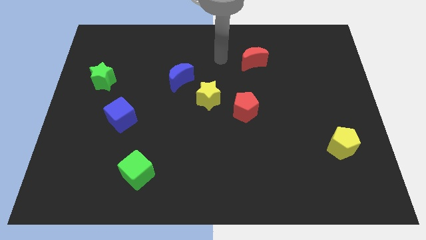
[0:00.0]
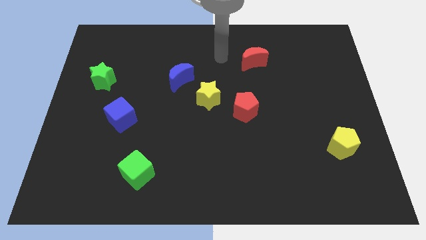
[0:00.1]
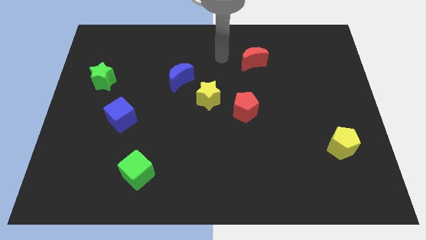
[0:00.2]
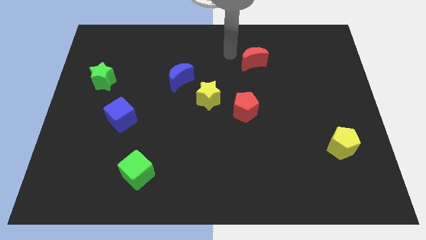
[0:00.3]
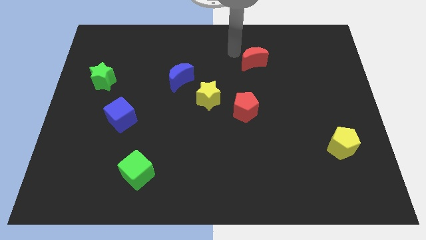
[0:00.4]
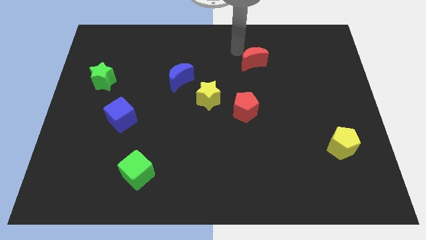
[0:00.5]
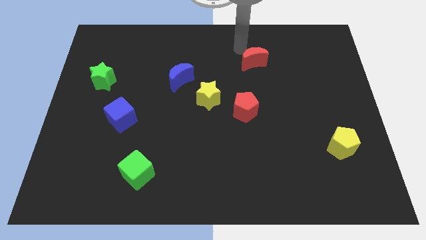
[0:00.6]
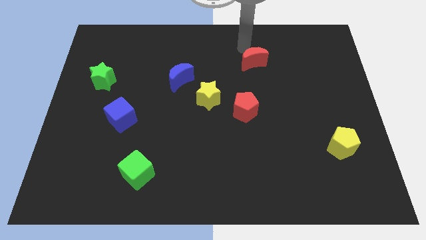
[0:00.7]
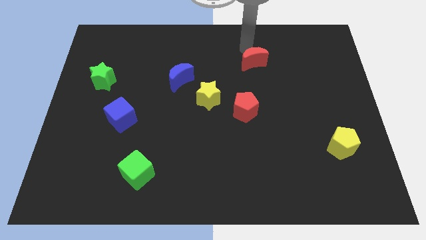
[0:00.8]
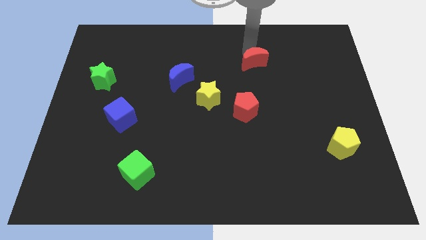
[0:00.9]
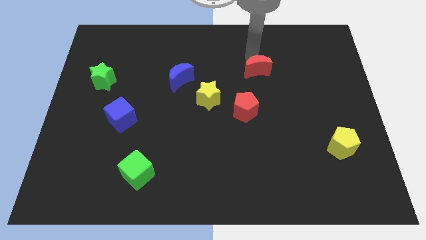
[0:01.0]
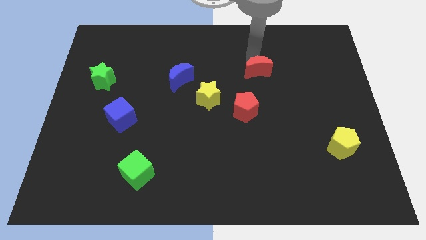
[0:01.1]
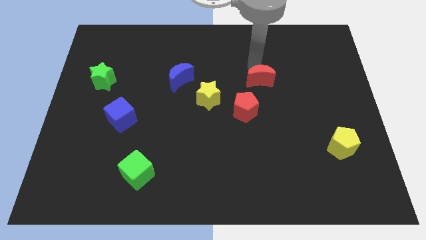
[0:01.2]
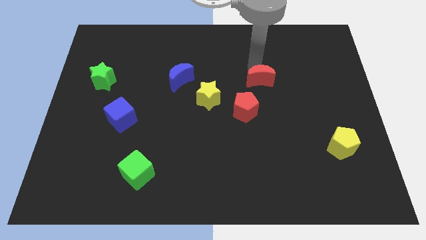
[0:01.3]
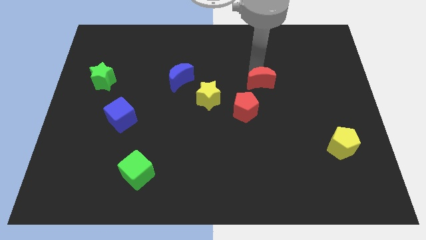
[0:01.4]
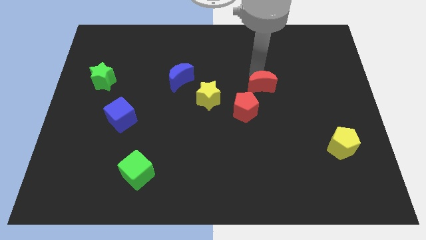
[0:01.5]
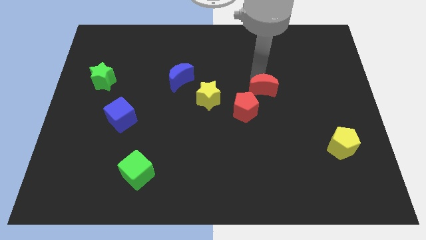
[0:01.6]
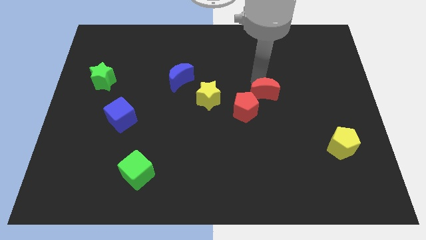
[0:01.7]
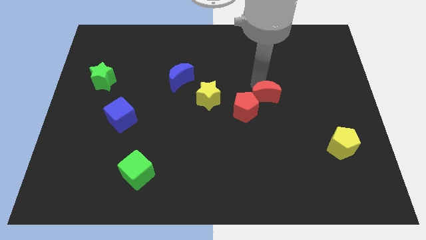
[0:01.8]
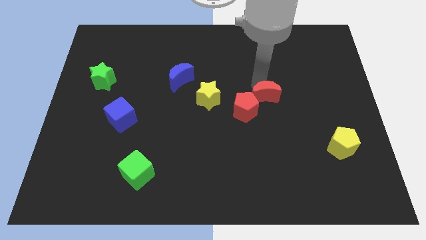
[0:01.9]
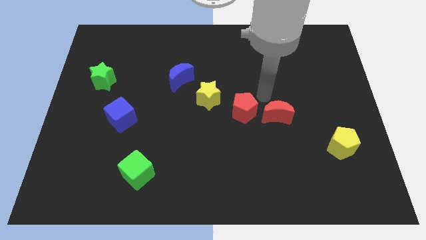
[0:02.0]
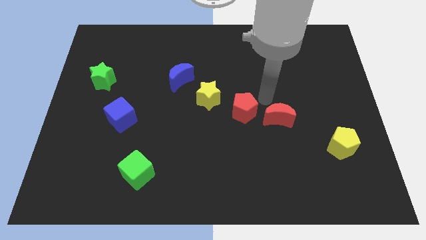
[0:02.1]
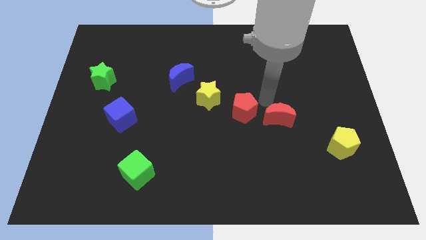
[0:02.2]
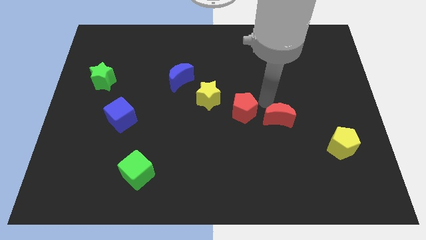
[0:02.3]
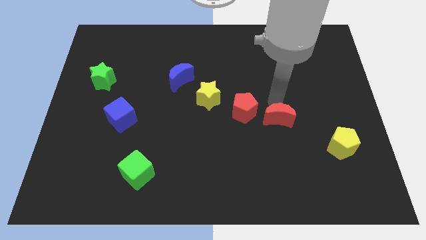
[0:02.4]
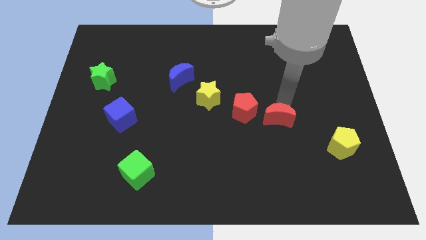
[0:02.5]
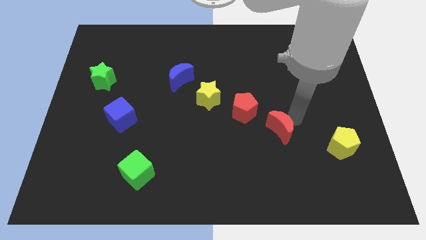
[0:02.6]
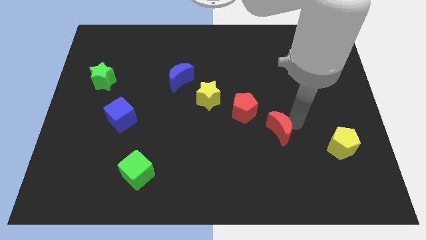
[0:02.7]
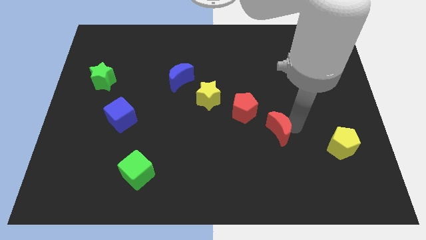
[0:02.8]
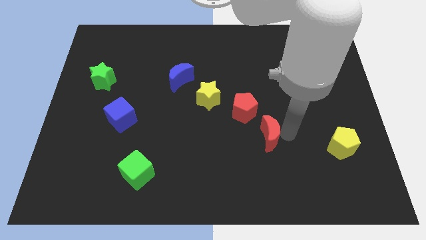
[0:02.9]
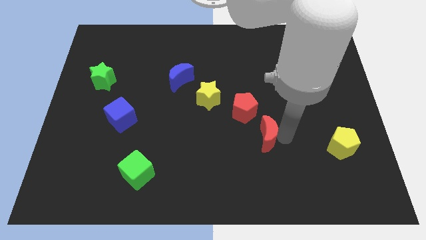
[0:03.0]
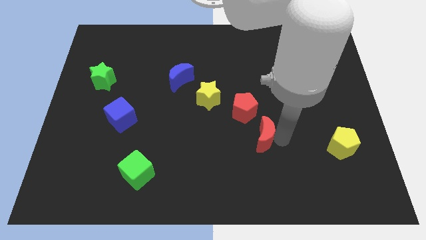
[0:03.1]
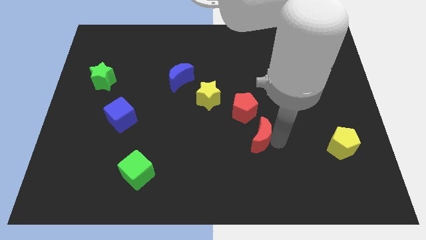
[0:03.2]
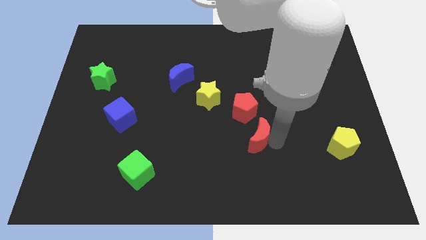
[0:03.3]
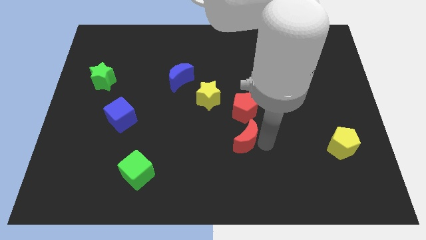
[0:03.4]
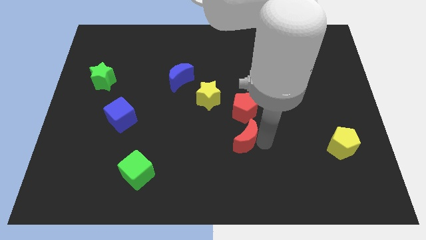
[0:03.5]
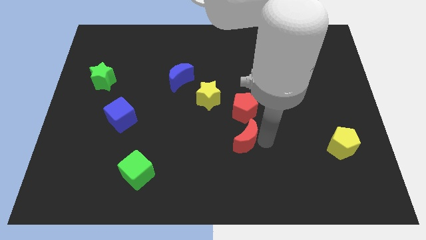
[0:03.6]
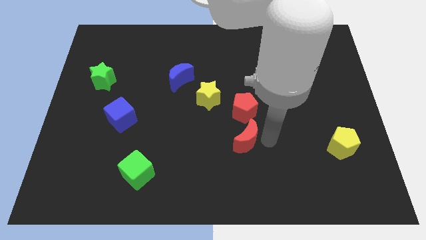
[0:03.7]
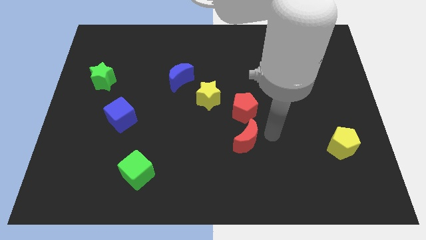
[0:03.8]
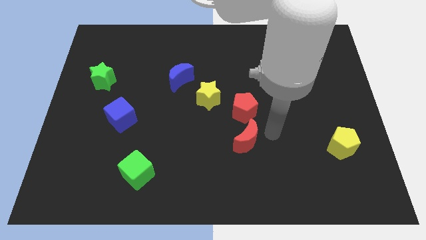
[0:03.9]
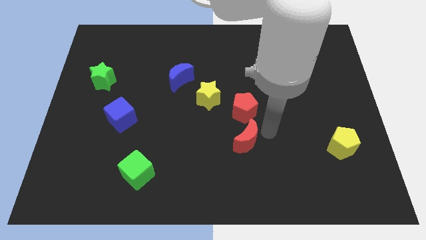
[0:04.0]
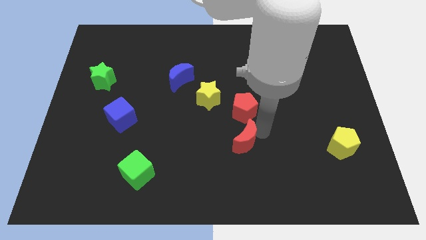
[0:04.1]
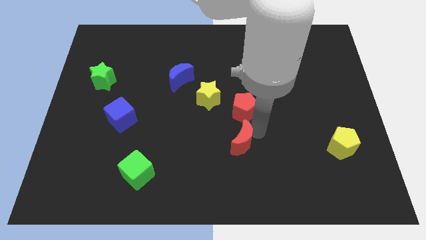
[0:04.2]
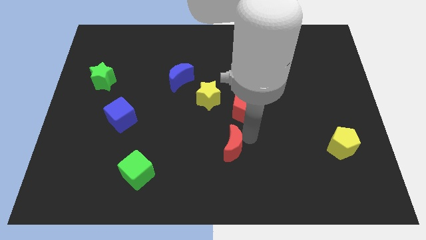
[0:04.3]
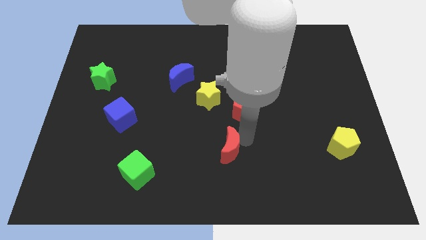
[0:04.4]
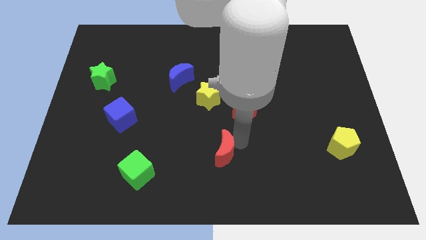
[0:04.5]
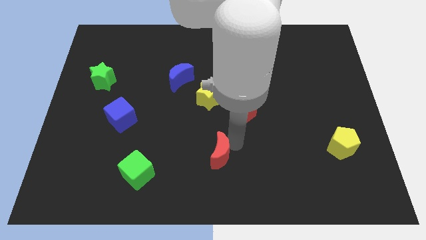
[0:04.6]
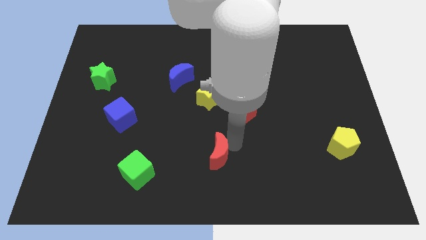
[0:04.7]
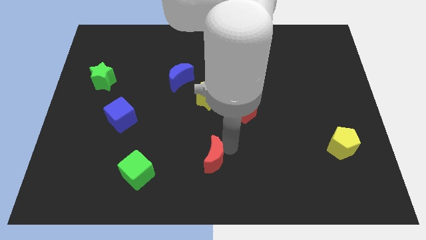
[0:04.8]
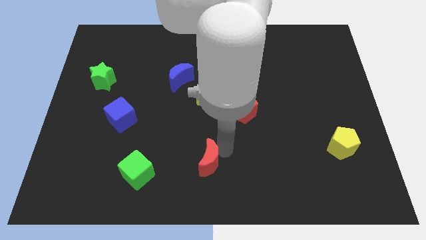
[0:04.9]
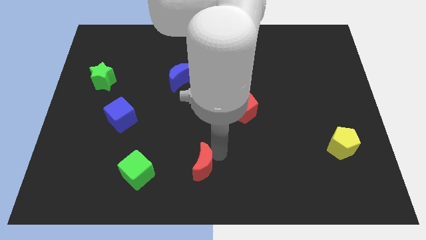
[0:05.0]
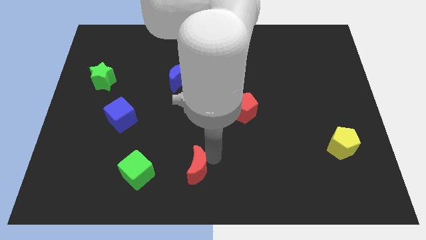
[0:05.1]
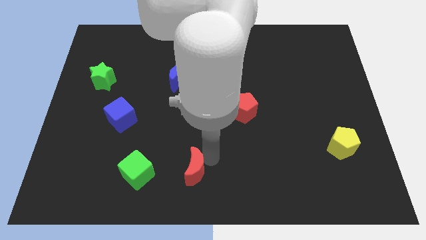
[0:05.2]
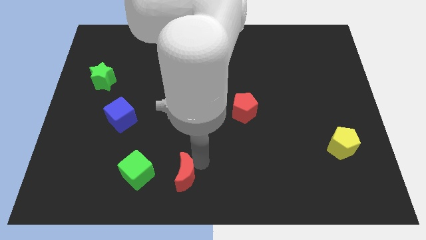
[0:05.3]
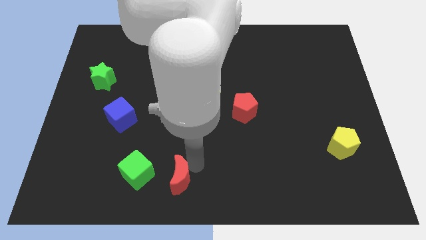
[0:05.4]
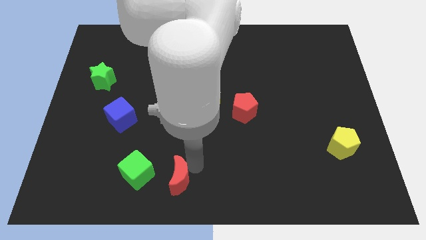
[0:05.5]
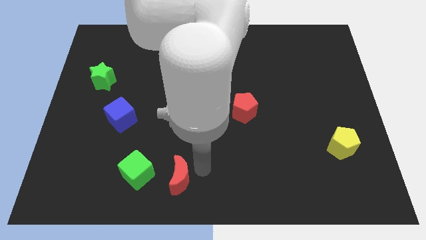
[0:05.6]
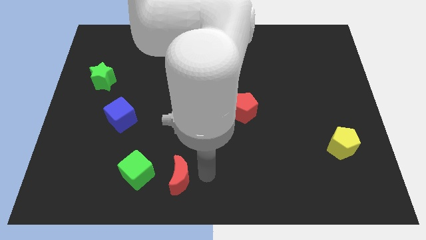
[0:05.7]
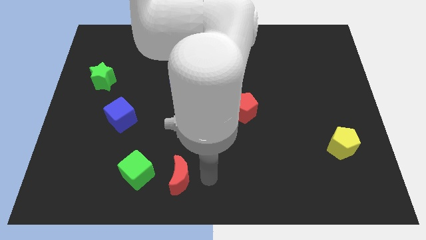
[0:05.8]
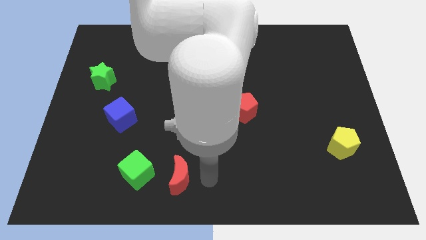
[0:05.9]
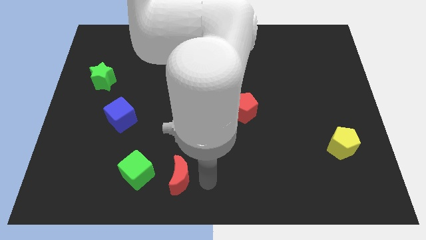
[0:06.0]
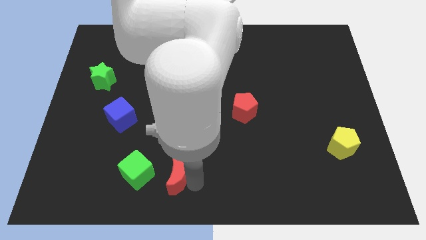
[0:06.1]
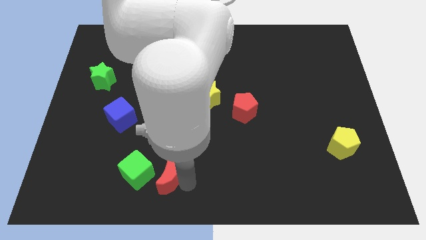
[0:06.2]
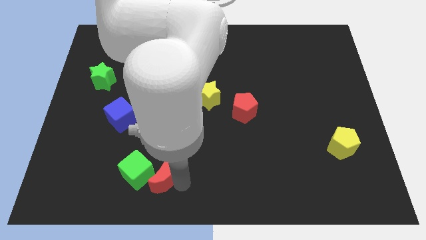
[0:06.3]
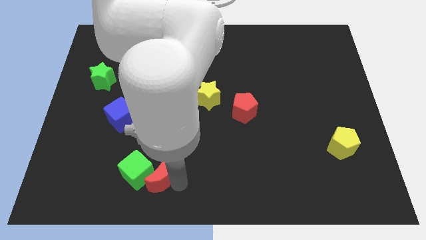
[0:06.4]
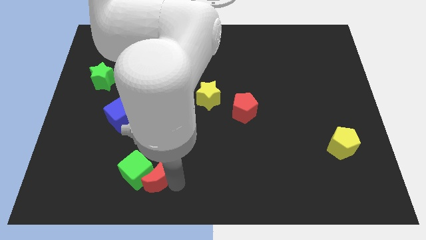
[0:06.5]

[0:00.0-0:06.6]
push the red moon to the green cube

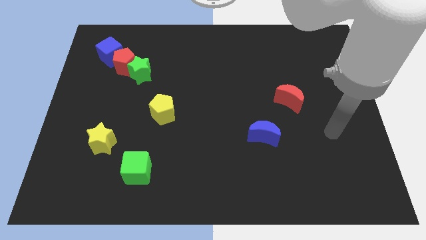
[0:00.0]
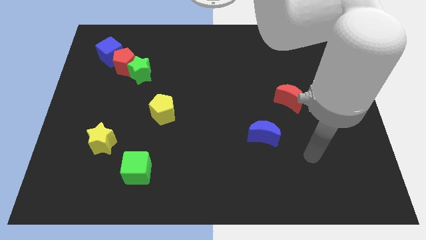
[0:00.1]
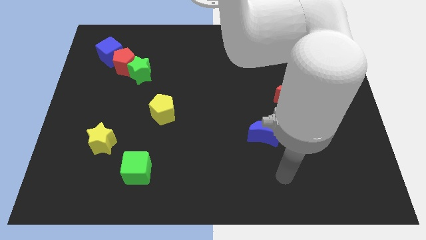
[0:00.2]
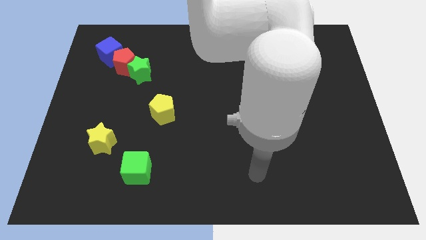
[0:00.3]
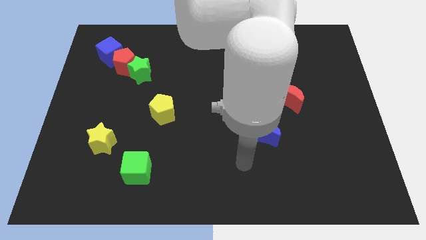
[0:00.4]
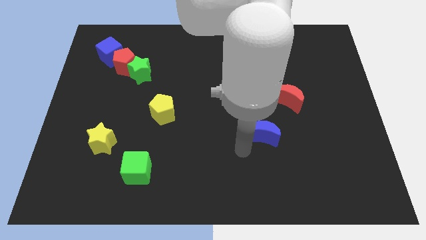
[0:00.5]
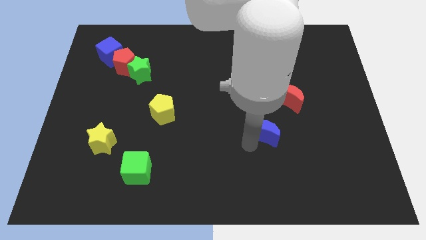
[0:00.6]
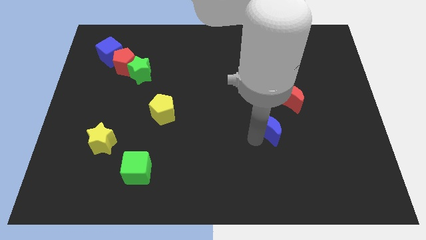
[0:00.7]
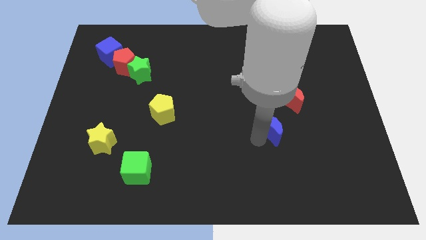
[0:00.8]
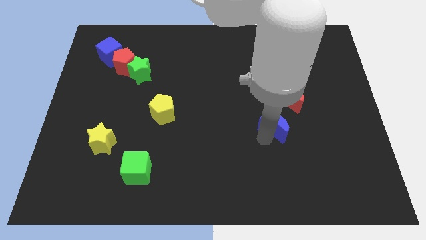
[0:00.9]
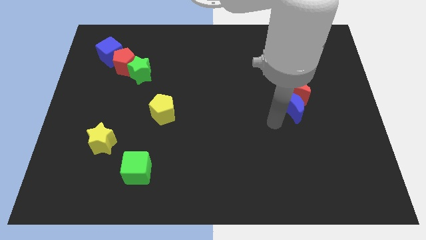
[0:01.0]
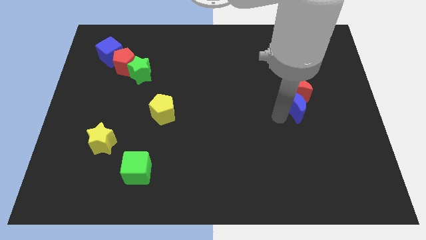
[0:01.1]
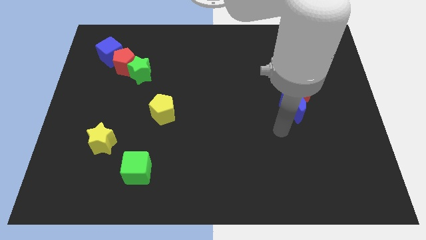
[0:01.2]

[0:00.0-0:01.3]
put the blue moon towards the red moon

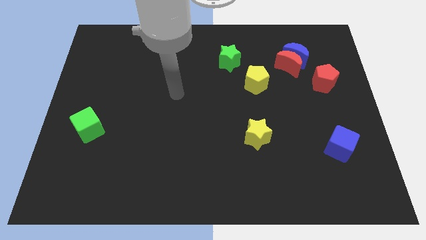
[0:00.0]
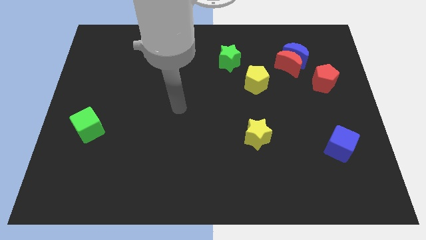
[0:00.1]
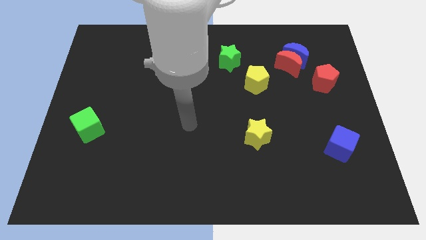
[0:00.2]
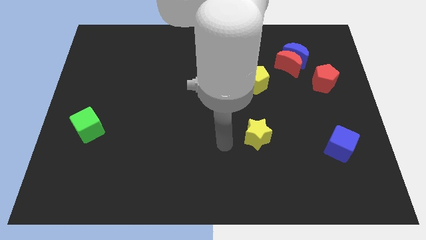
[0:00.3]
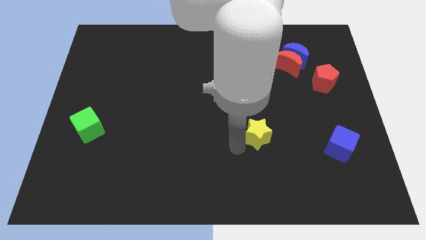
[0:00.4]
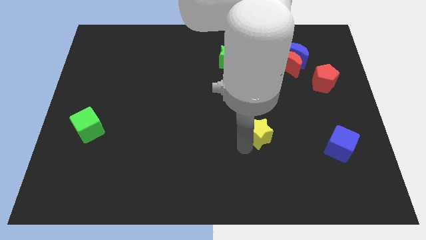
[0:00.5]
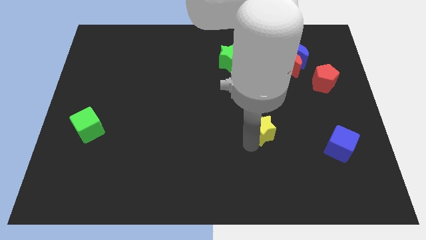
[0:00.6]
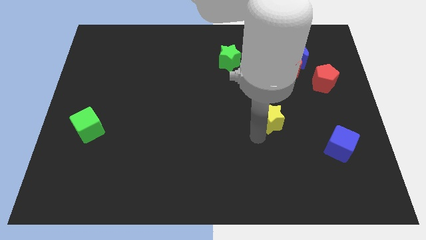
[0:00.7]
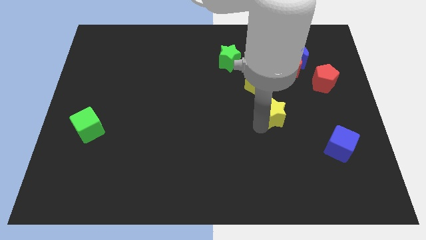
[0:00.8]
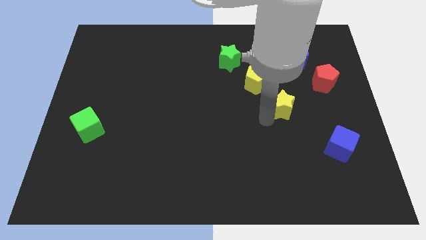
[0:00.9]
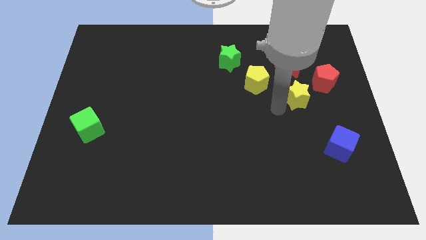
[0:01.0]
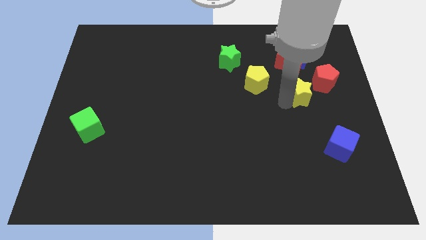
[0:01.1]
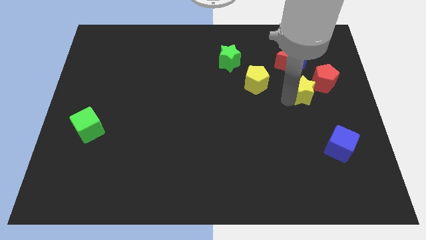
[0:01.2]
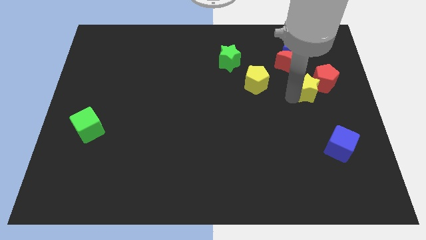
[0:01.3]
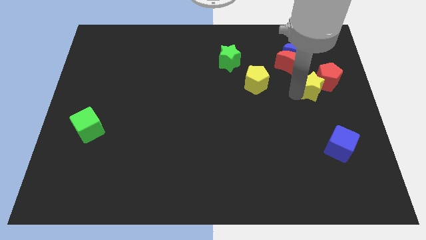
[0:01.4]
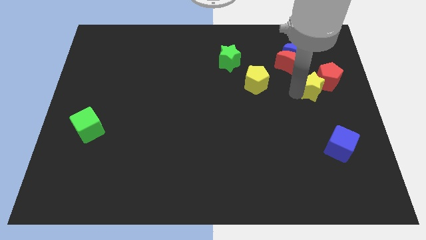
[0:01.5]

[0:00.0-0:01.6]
slide the yellow star next to the red pentagon
